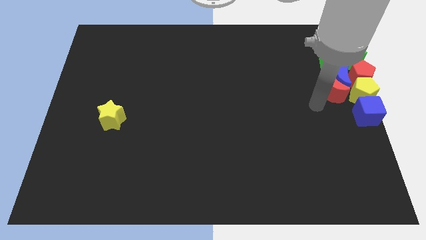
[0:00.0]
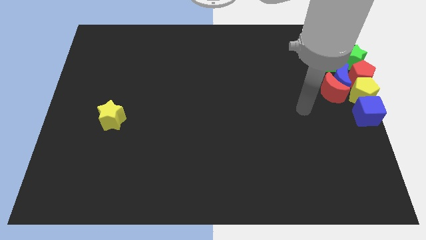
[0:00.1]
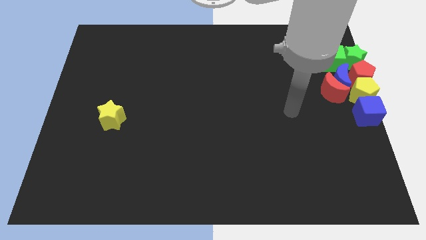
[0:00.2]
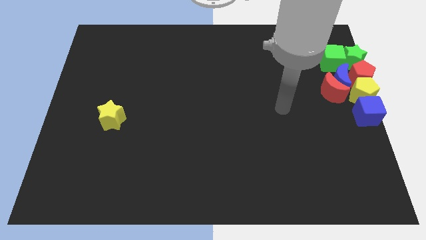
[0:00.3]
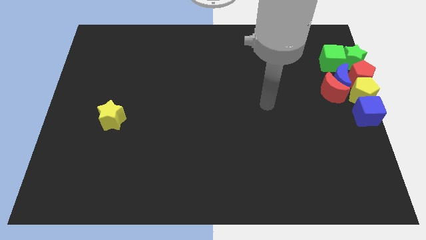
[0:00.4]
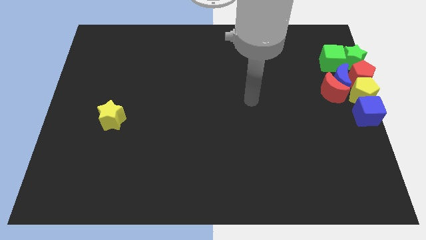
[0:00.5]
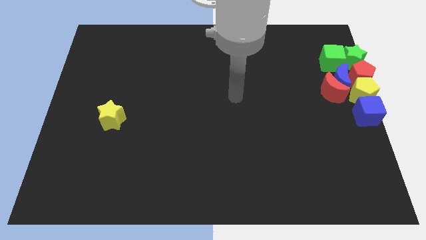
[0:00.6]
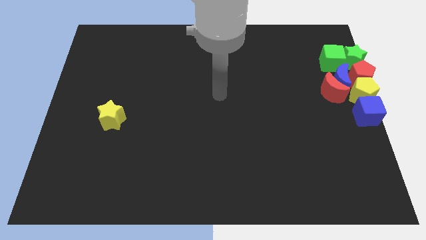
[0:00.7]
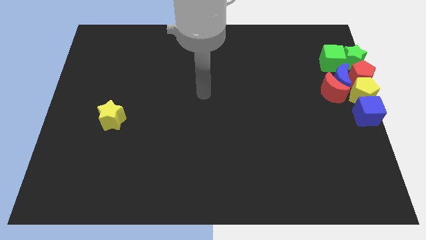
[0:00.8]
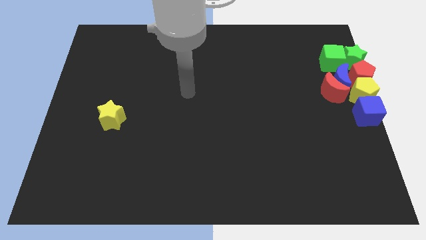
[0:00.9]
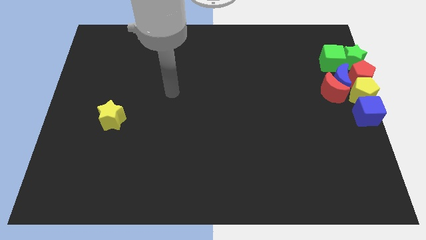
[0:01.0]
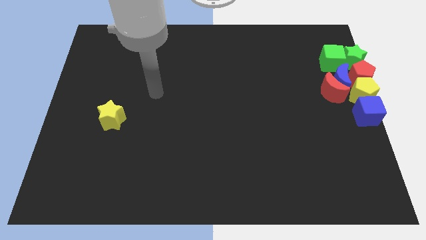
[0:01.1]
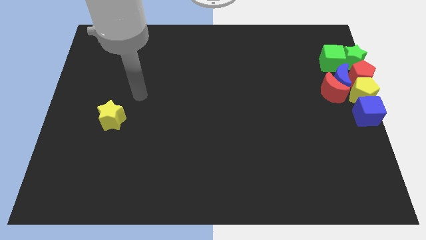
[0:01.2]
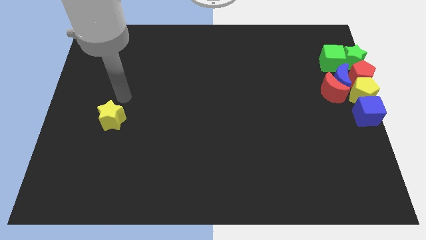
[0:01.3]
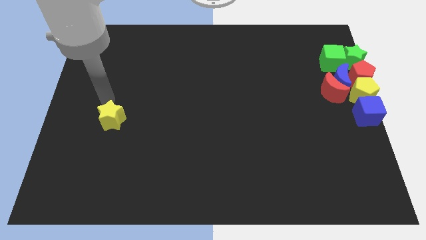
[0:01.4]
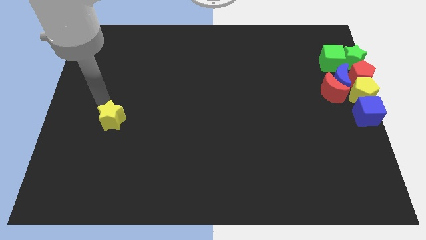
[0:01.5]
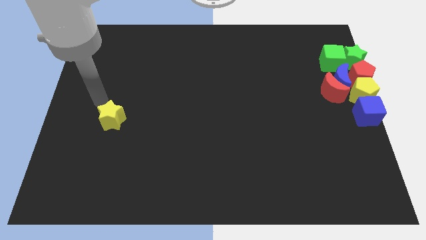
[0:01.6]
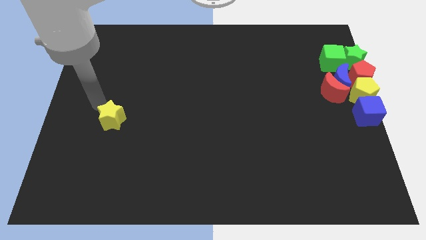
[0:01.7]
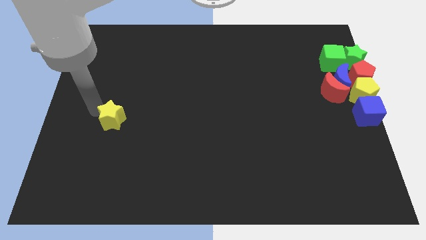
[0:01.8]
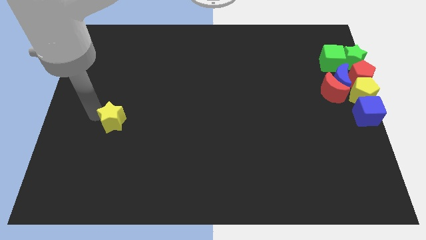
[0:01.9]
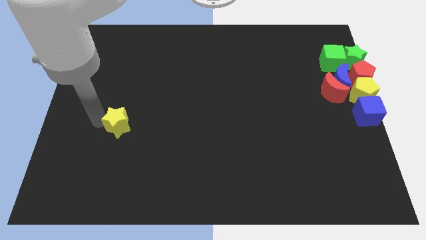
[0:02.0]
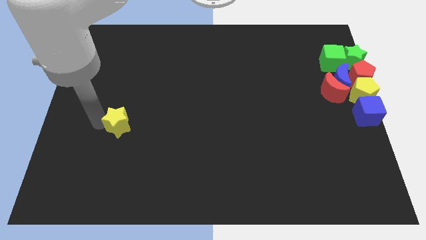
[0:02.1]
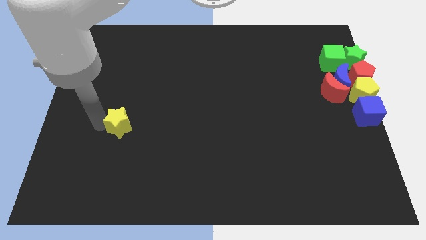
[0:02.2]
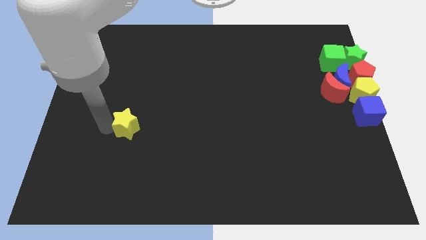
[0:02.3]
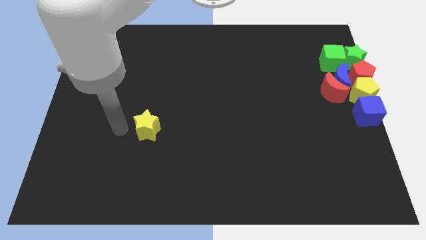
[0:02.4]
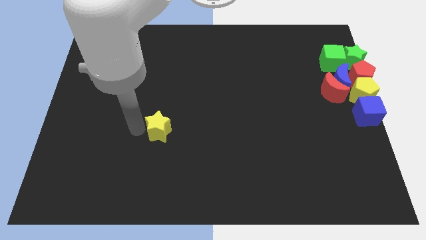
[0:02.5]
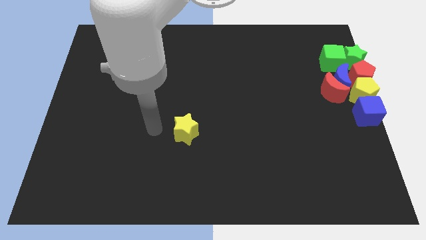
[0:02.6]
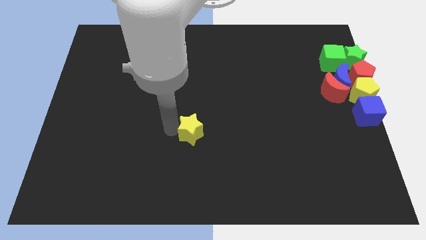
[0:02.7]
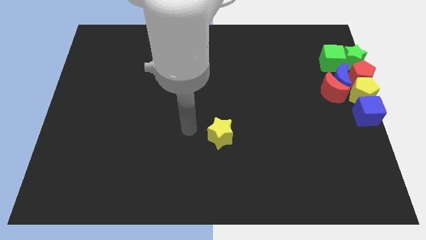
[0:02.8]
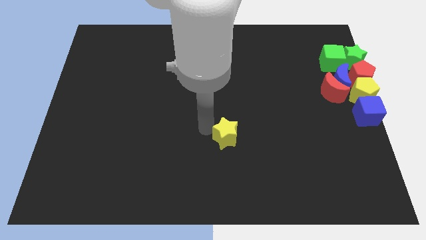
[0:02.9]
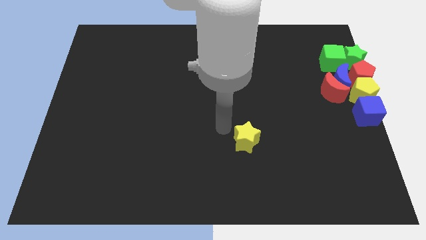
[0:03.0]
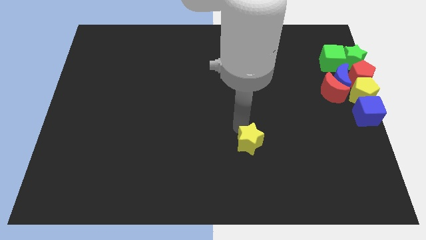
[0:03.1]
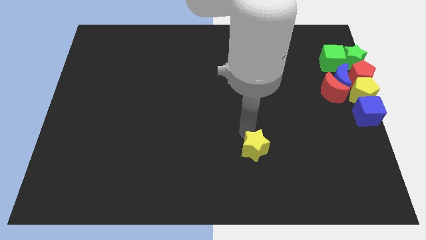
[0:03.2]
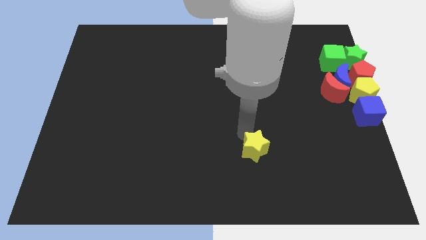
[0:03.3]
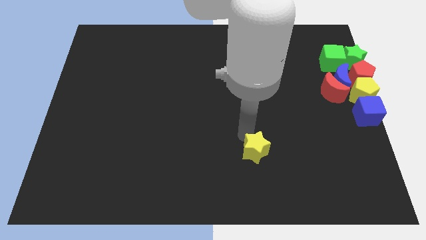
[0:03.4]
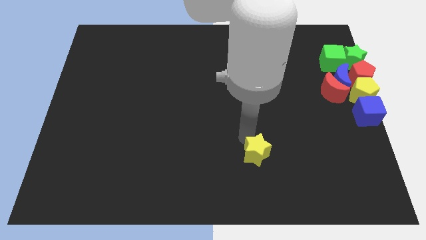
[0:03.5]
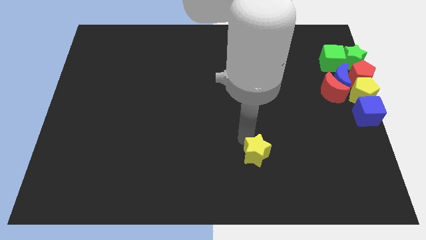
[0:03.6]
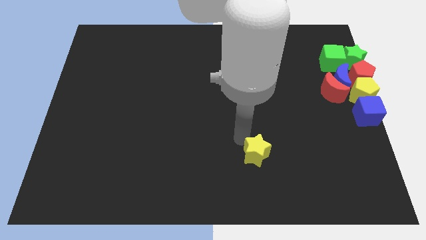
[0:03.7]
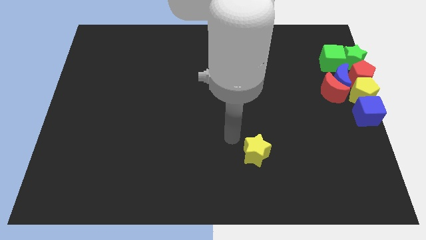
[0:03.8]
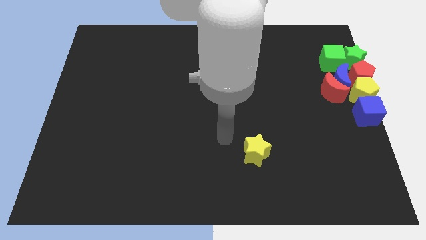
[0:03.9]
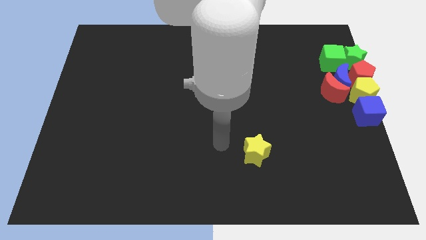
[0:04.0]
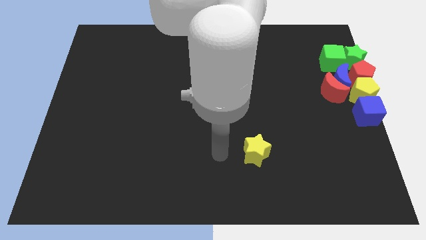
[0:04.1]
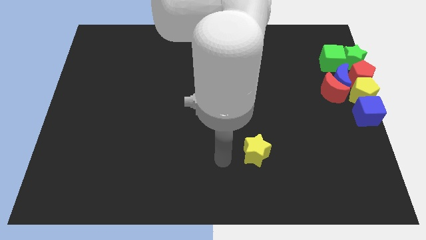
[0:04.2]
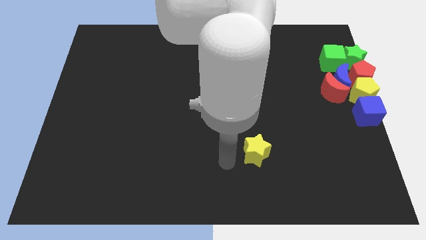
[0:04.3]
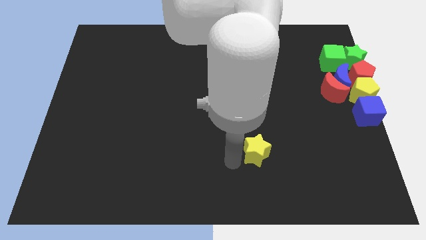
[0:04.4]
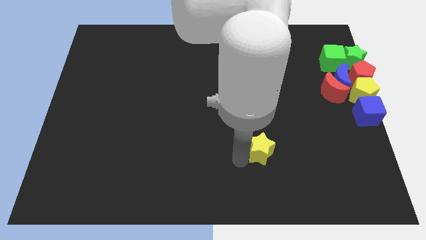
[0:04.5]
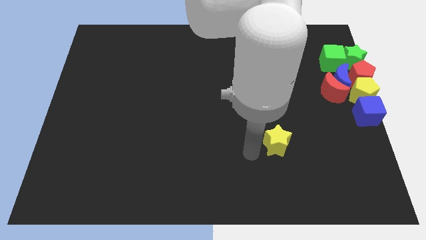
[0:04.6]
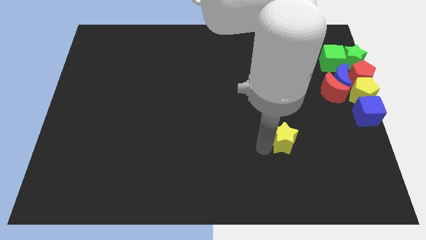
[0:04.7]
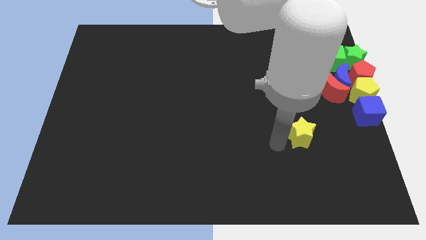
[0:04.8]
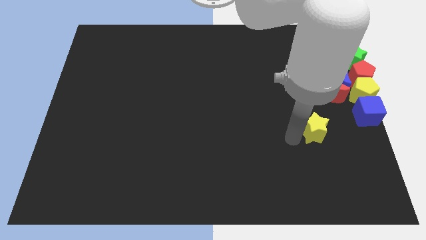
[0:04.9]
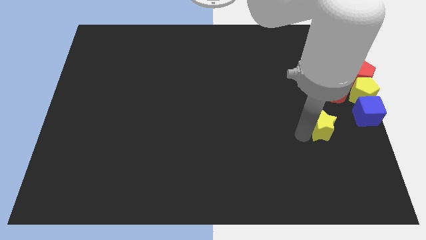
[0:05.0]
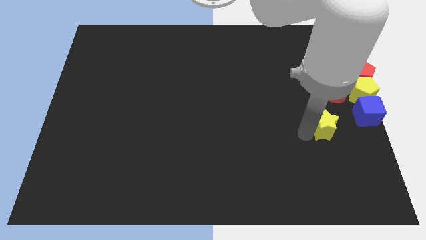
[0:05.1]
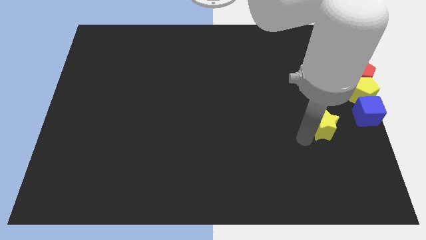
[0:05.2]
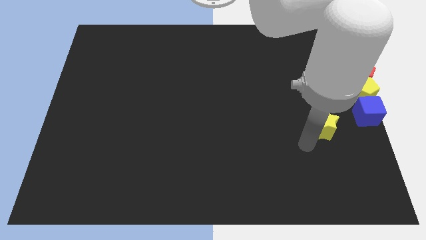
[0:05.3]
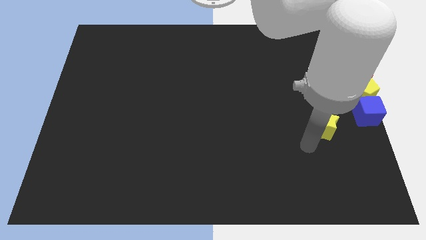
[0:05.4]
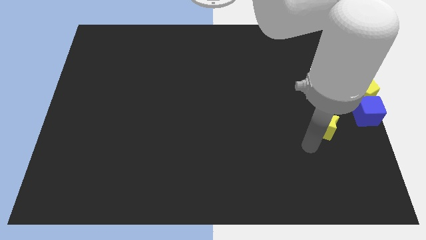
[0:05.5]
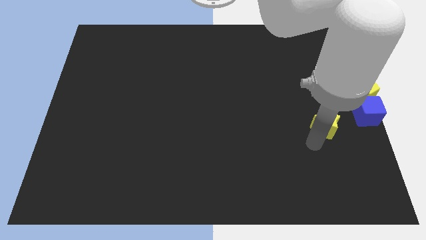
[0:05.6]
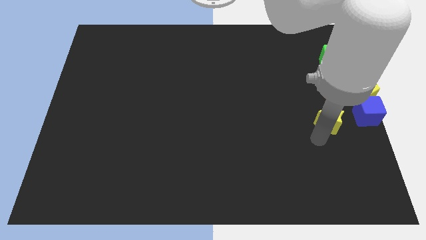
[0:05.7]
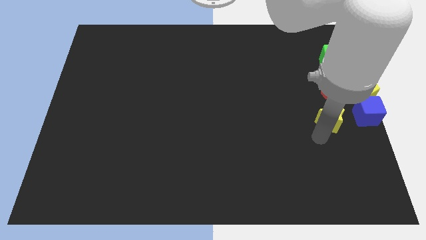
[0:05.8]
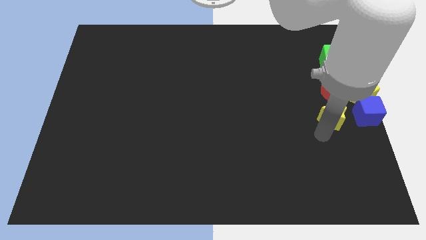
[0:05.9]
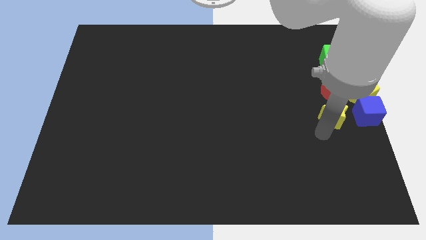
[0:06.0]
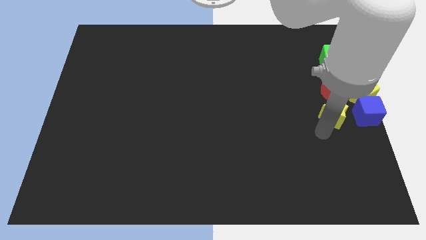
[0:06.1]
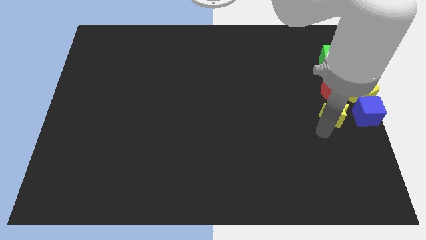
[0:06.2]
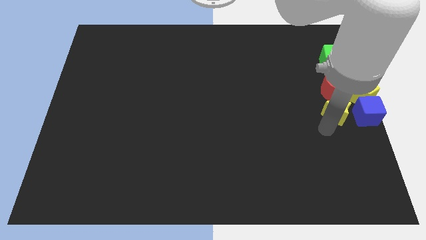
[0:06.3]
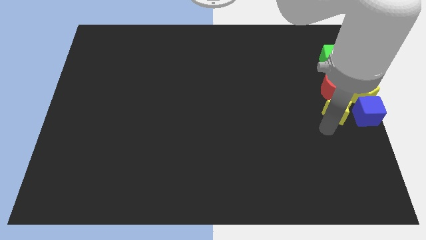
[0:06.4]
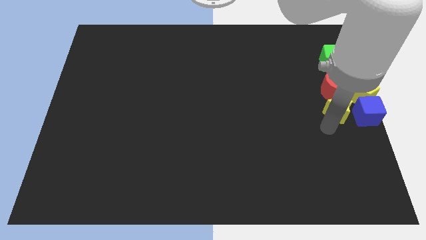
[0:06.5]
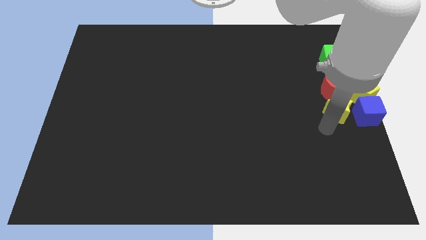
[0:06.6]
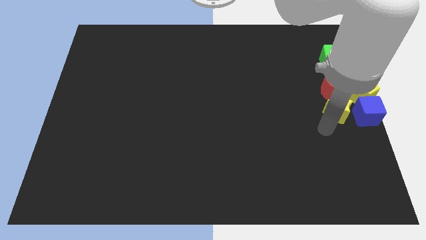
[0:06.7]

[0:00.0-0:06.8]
move the yellow star at the bottom of the red crescent

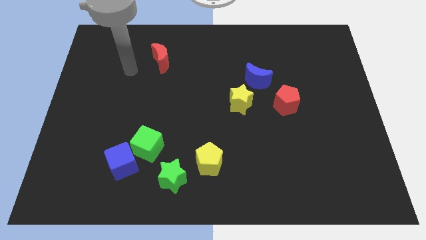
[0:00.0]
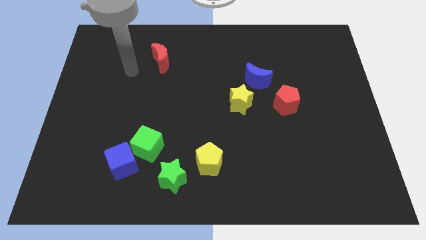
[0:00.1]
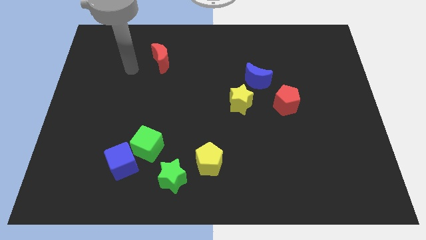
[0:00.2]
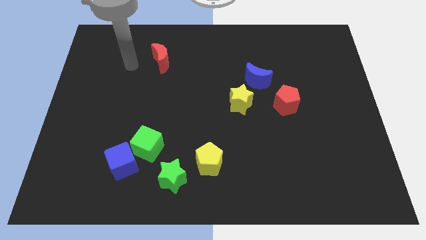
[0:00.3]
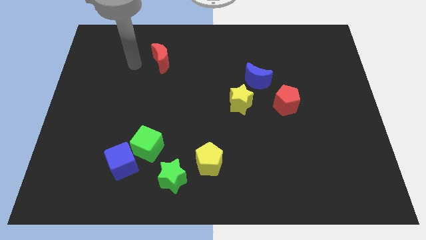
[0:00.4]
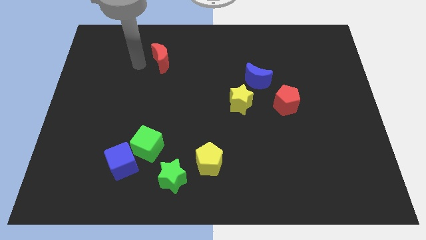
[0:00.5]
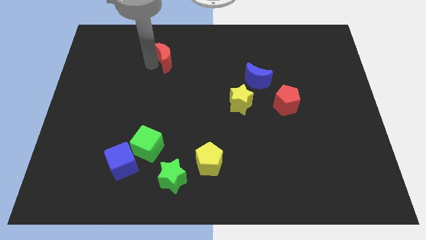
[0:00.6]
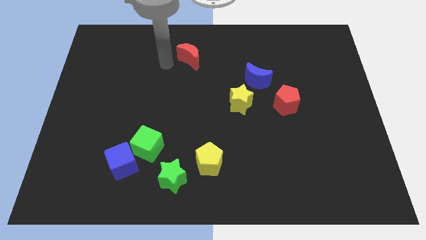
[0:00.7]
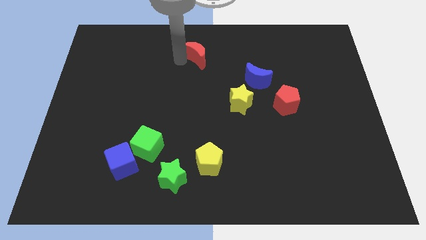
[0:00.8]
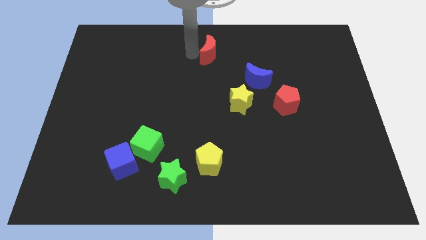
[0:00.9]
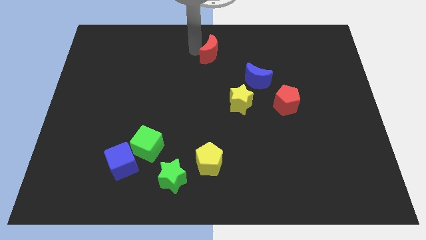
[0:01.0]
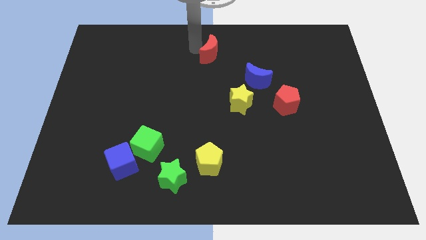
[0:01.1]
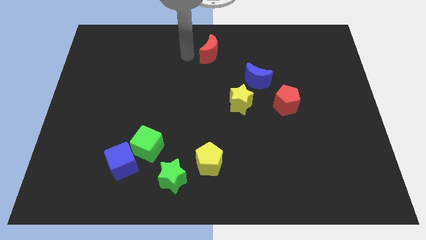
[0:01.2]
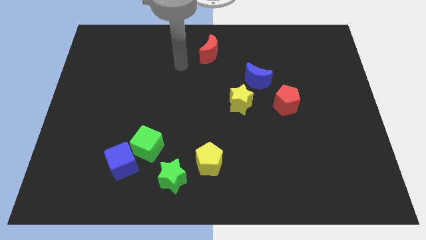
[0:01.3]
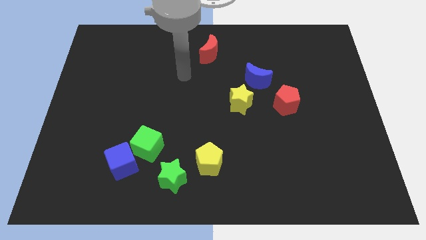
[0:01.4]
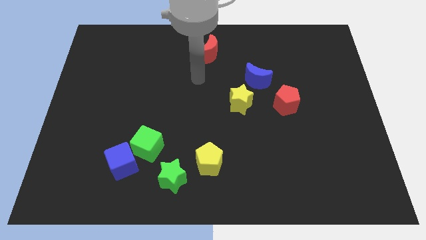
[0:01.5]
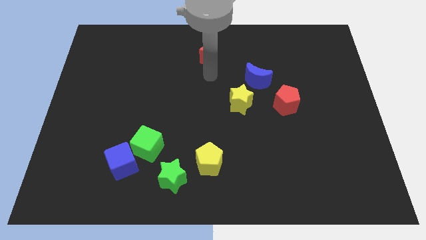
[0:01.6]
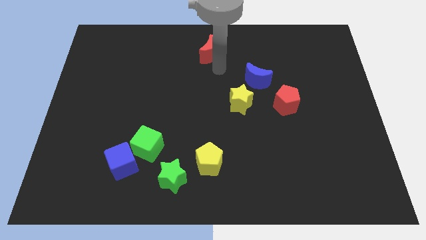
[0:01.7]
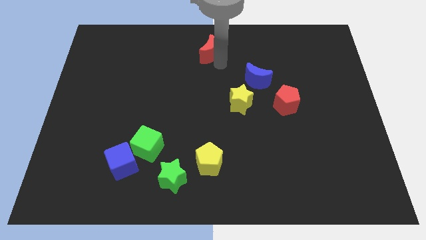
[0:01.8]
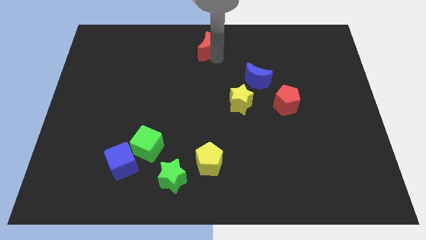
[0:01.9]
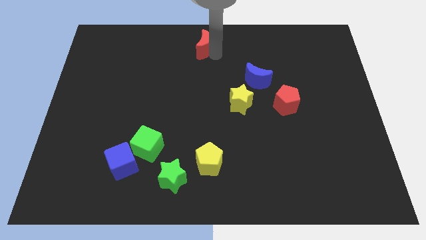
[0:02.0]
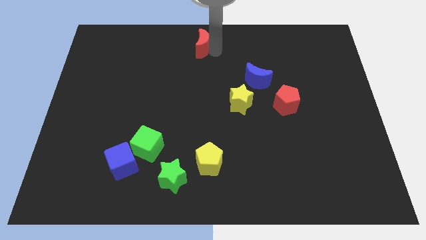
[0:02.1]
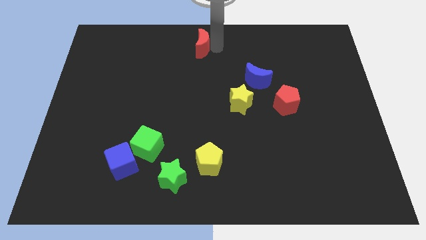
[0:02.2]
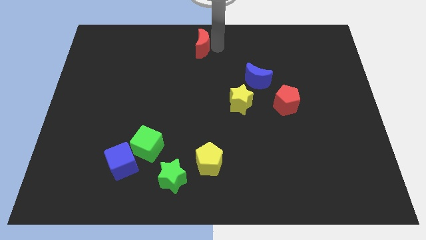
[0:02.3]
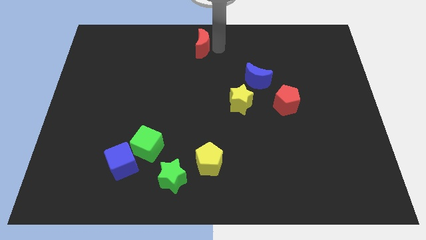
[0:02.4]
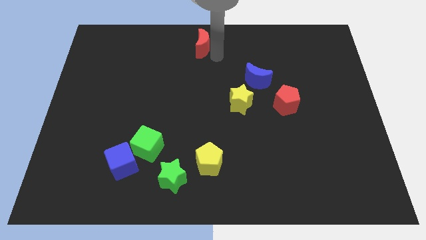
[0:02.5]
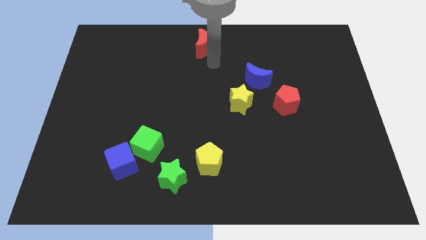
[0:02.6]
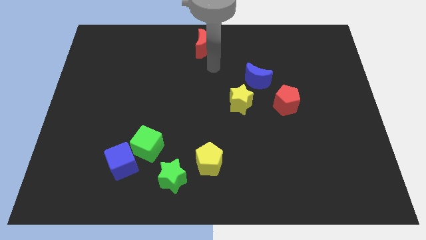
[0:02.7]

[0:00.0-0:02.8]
move arm near red moon
